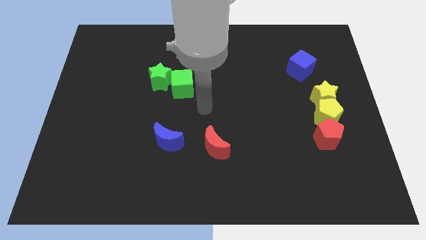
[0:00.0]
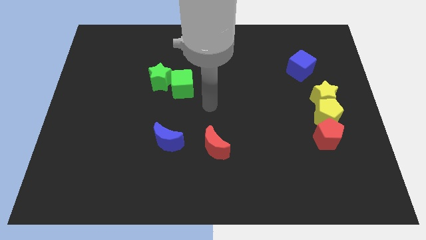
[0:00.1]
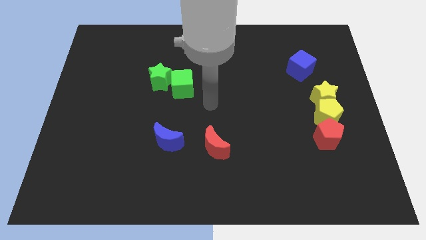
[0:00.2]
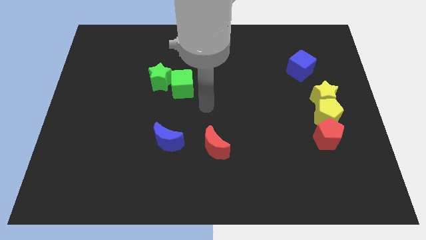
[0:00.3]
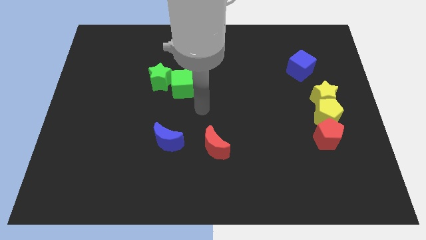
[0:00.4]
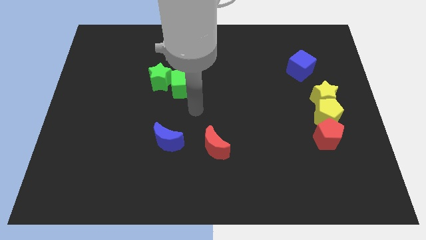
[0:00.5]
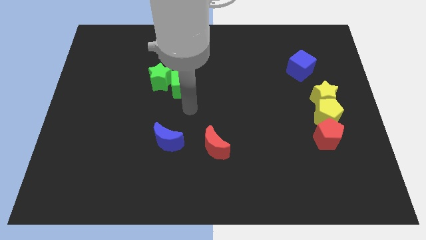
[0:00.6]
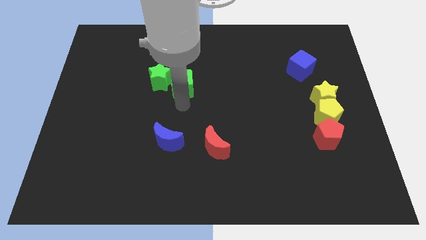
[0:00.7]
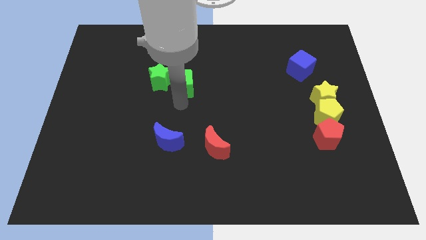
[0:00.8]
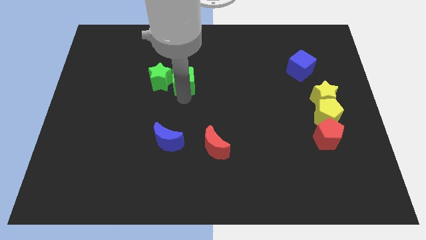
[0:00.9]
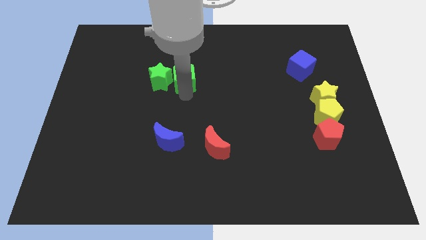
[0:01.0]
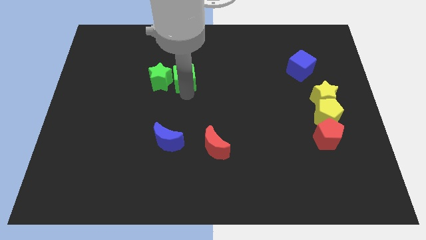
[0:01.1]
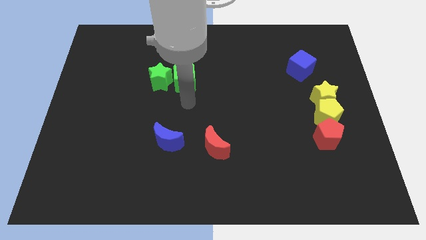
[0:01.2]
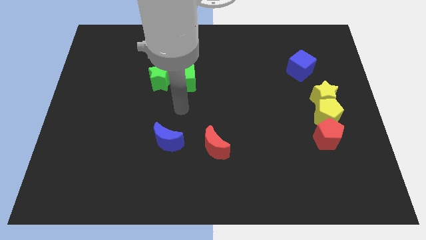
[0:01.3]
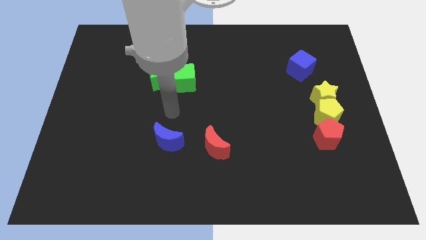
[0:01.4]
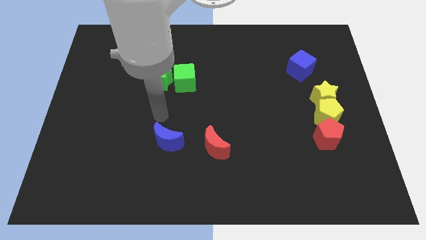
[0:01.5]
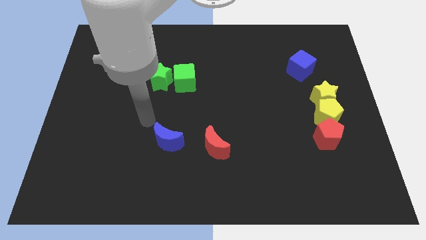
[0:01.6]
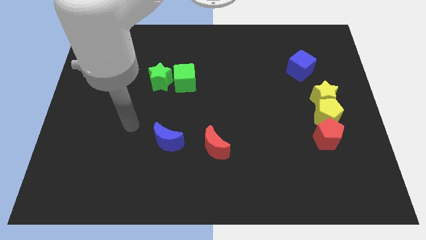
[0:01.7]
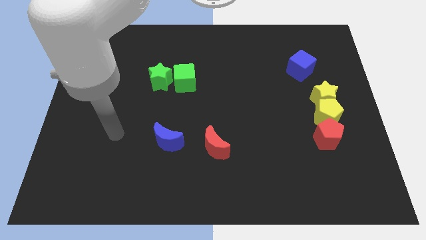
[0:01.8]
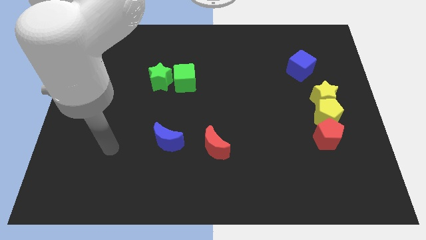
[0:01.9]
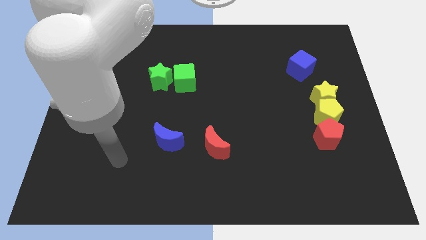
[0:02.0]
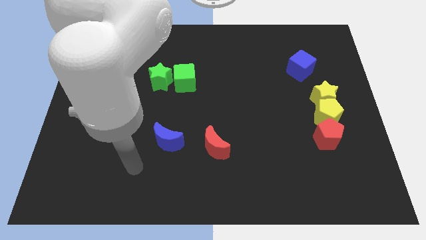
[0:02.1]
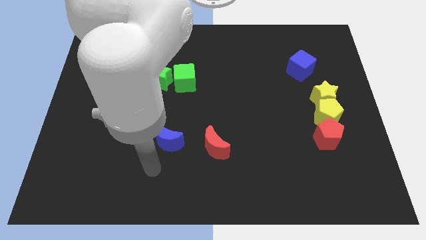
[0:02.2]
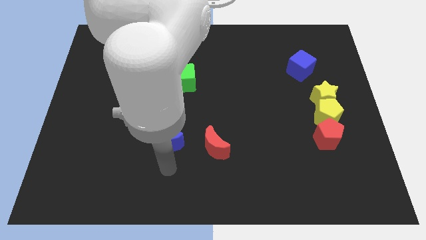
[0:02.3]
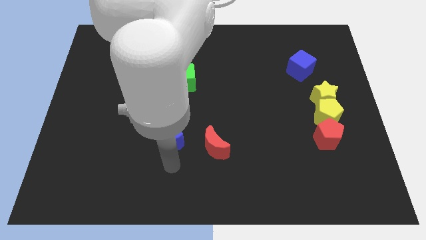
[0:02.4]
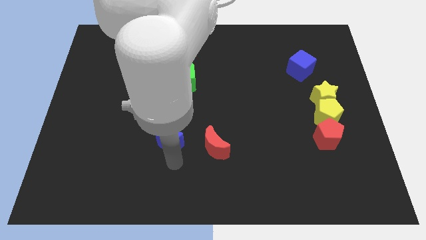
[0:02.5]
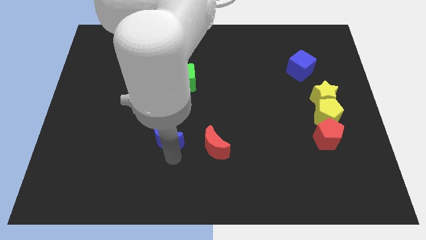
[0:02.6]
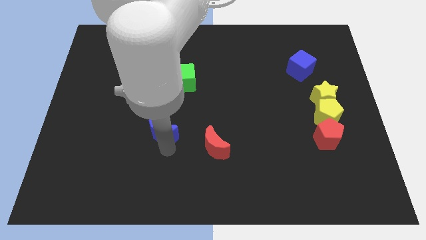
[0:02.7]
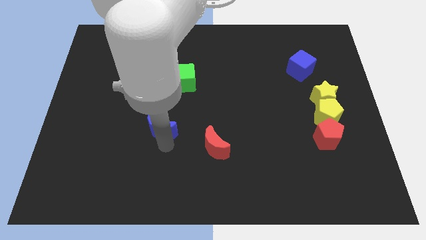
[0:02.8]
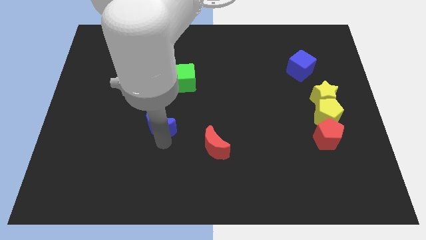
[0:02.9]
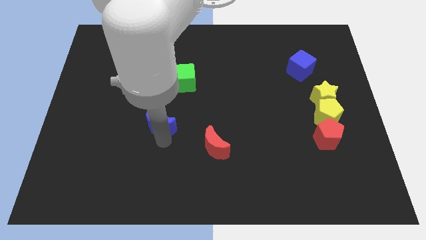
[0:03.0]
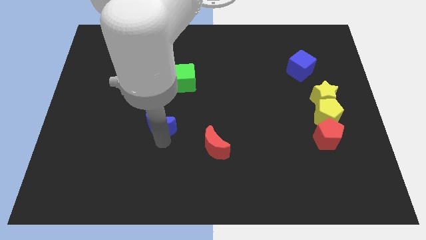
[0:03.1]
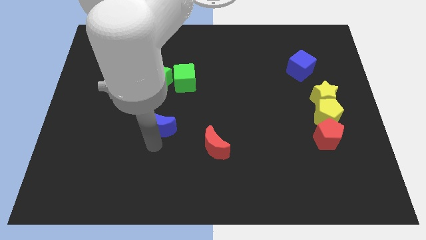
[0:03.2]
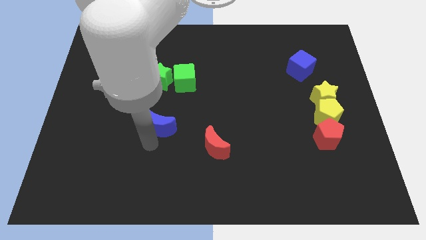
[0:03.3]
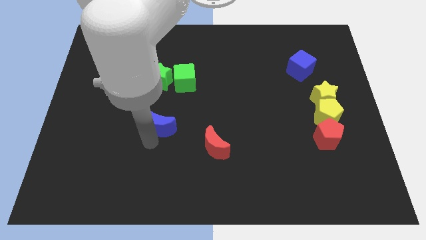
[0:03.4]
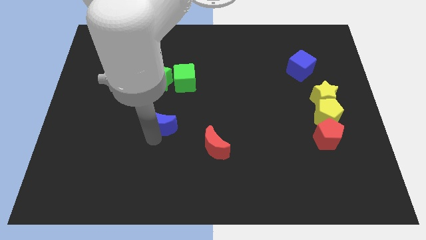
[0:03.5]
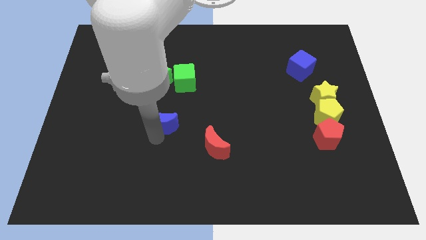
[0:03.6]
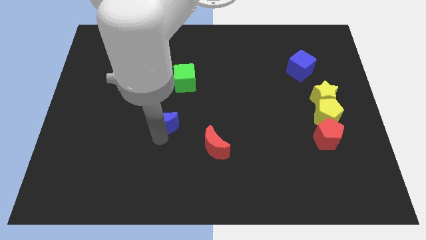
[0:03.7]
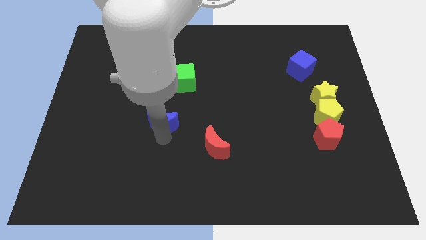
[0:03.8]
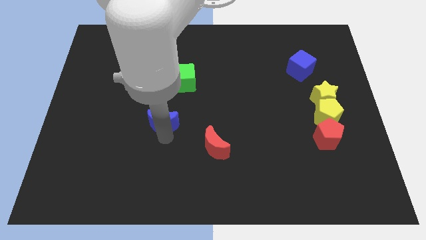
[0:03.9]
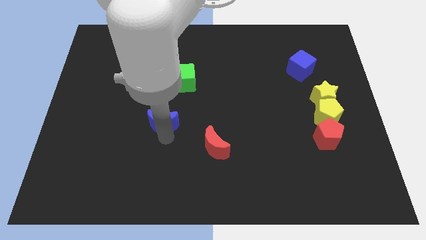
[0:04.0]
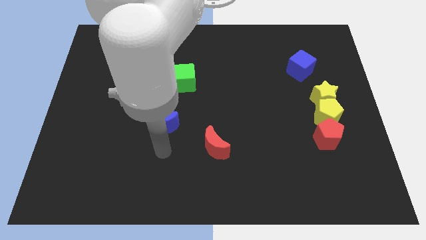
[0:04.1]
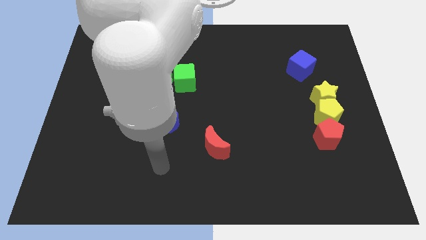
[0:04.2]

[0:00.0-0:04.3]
move the blue moon to the center

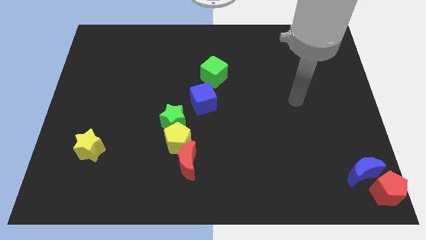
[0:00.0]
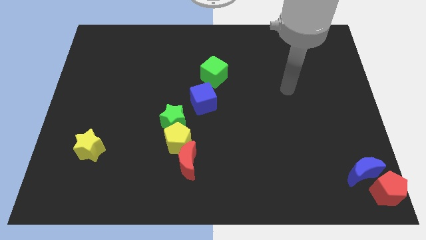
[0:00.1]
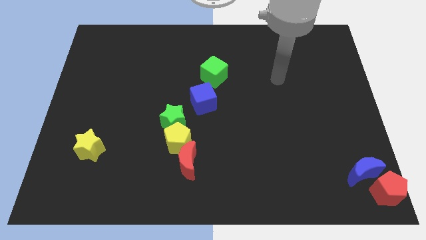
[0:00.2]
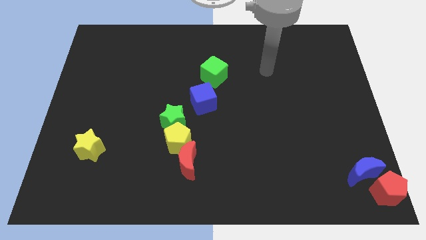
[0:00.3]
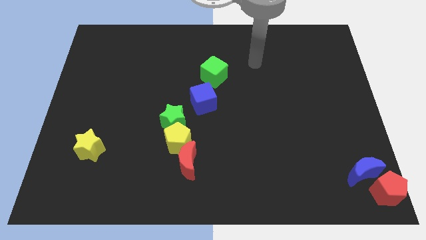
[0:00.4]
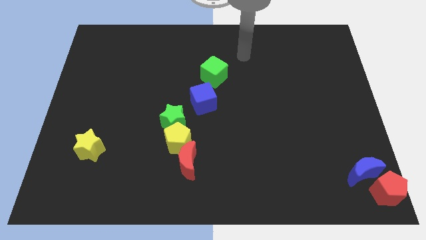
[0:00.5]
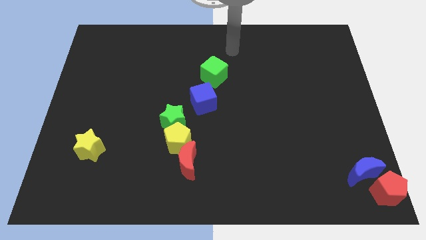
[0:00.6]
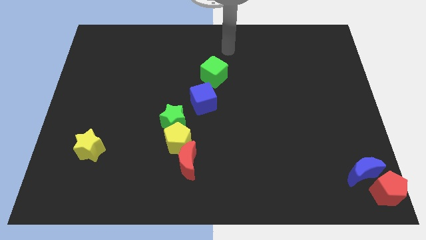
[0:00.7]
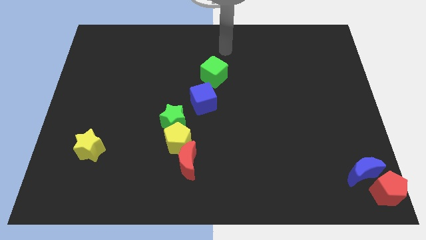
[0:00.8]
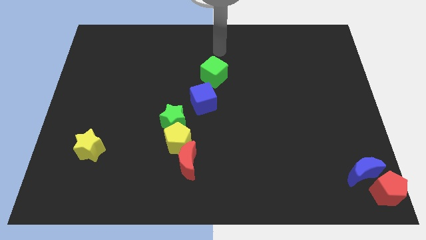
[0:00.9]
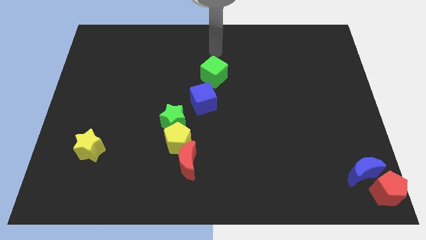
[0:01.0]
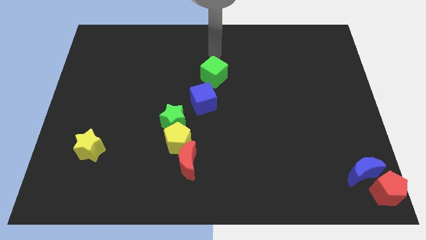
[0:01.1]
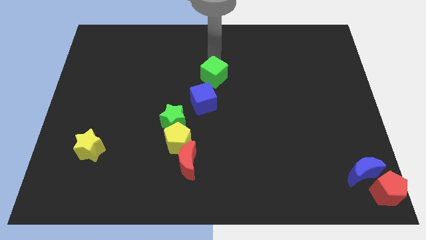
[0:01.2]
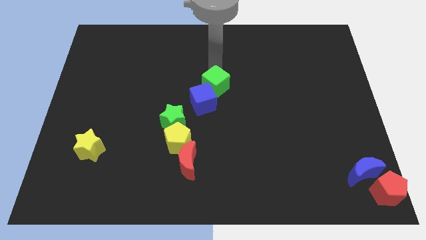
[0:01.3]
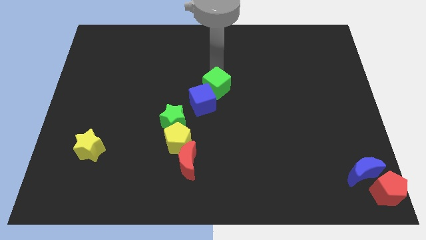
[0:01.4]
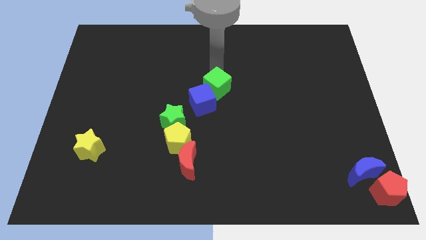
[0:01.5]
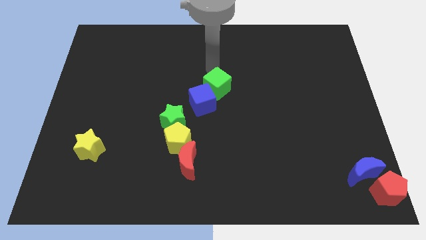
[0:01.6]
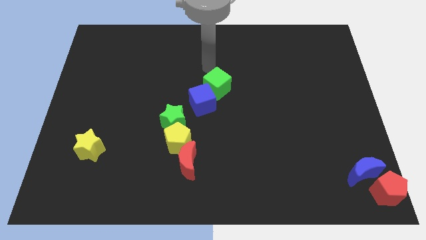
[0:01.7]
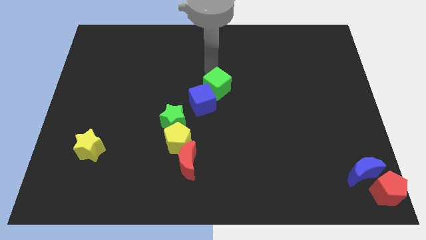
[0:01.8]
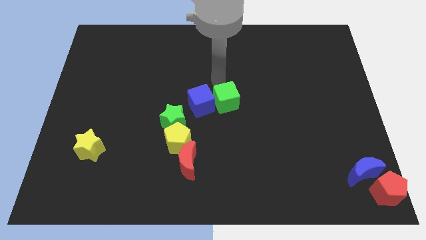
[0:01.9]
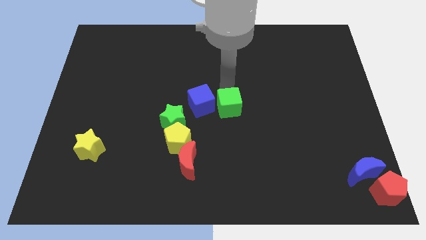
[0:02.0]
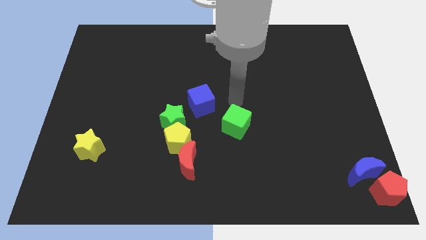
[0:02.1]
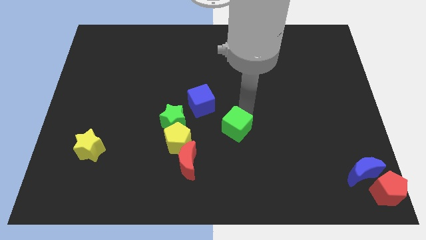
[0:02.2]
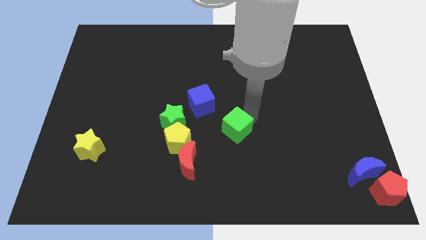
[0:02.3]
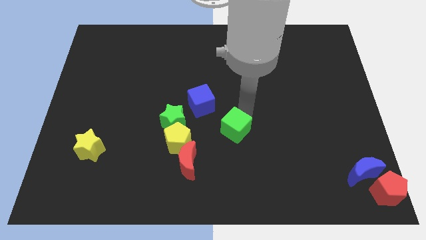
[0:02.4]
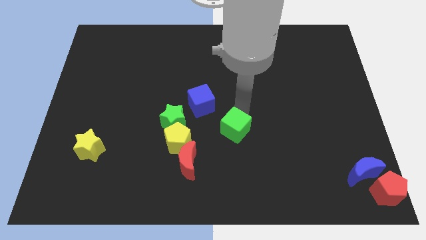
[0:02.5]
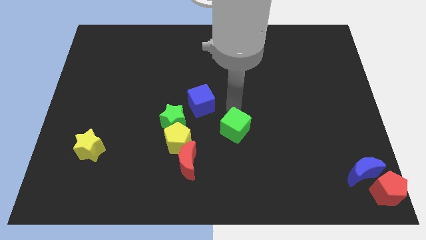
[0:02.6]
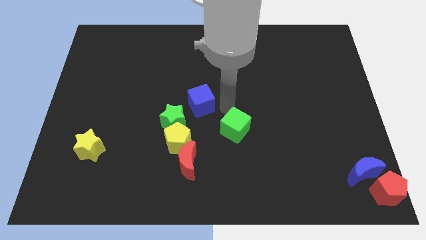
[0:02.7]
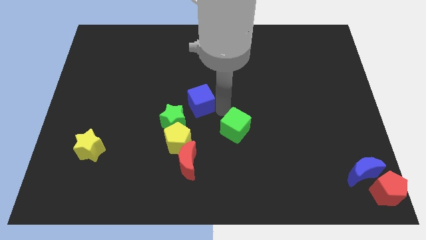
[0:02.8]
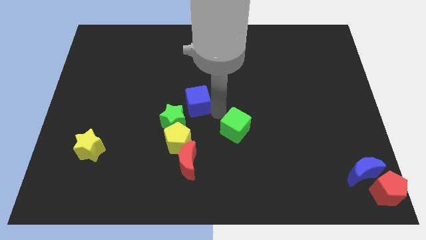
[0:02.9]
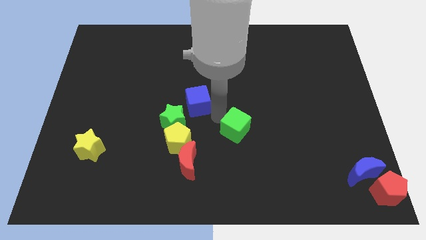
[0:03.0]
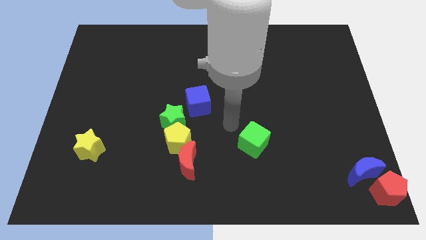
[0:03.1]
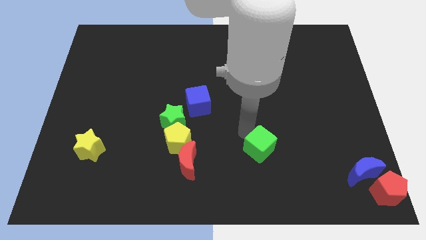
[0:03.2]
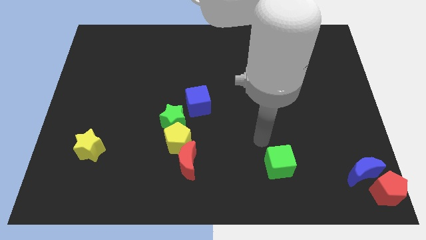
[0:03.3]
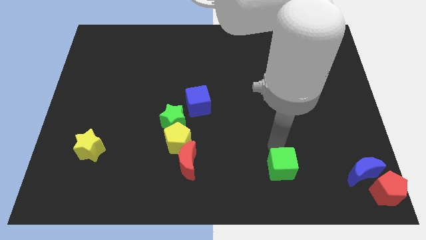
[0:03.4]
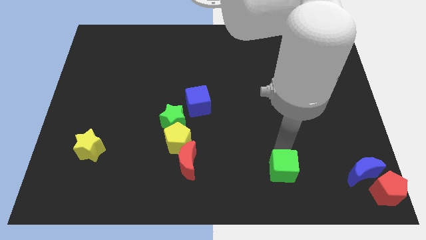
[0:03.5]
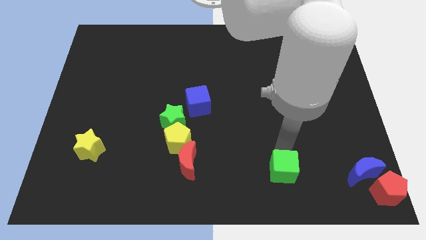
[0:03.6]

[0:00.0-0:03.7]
place green cube to the right of the red moon

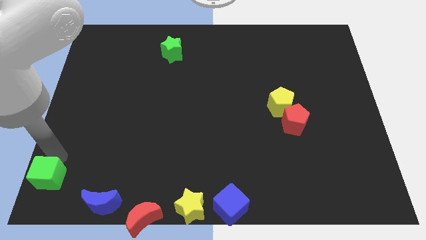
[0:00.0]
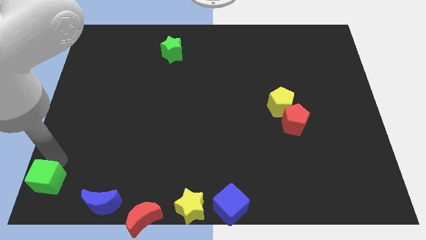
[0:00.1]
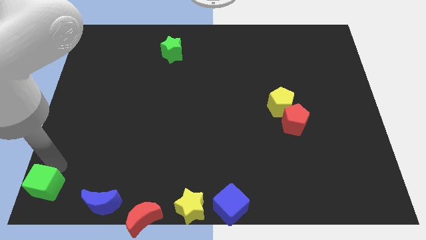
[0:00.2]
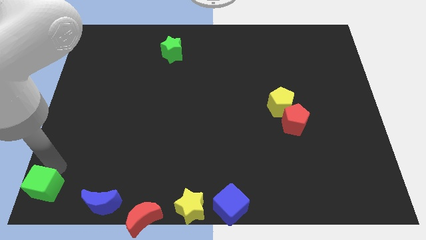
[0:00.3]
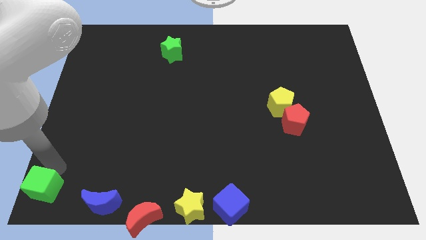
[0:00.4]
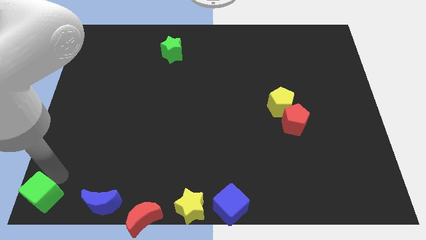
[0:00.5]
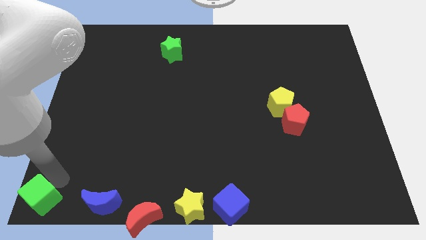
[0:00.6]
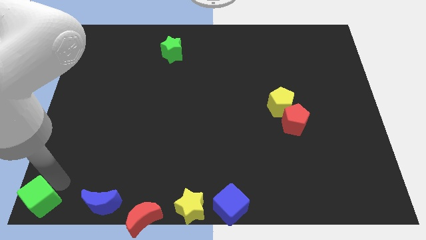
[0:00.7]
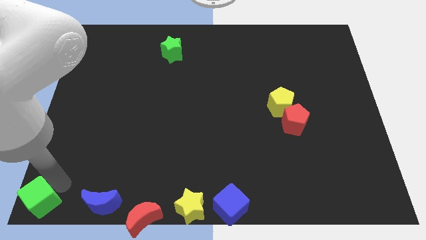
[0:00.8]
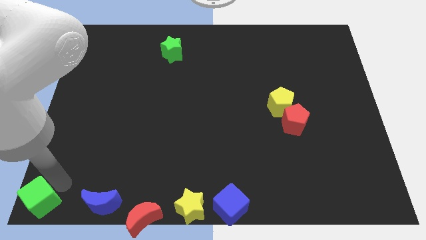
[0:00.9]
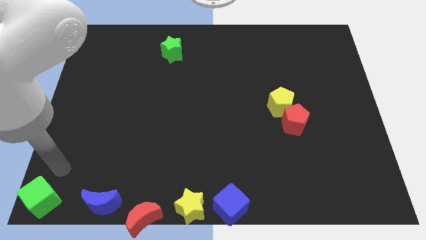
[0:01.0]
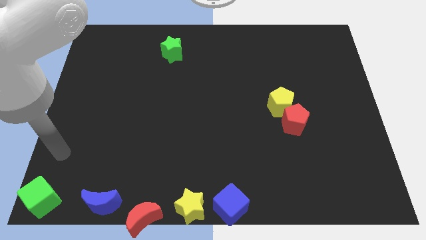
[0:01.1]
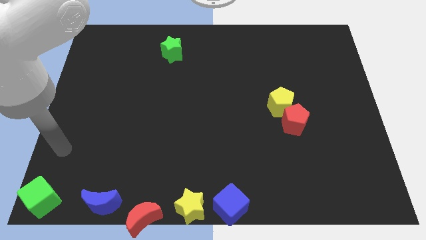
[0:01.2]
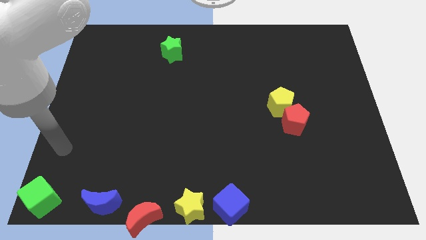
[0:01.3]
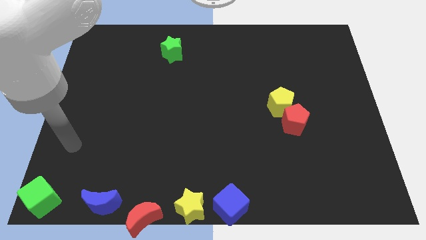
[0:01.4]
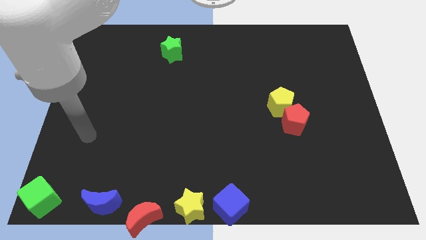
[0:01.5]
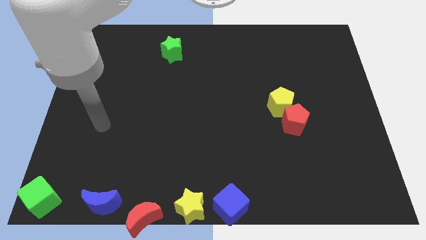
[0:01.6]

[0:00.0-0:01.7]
place green cube to the left side of the blue moon
